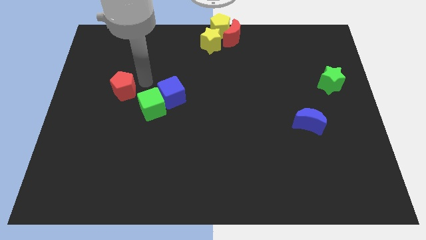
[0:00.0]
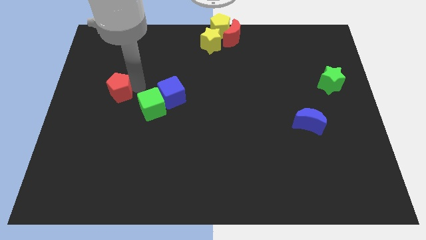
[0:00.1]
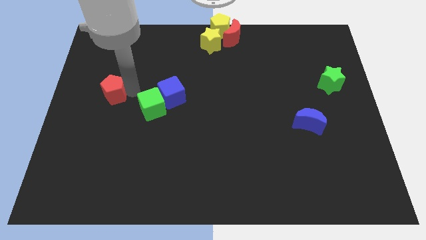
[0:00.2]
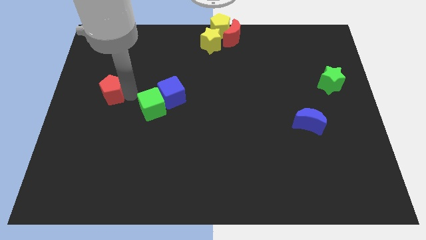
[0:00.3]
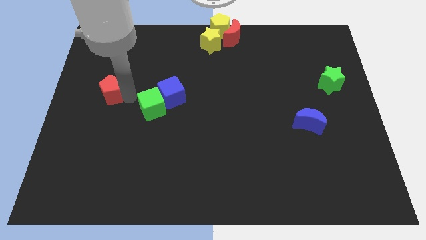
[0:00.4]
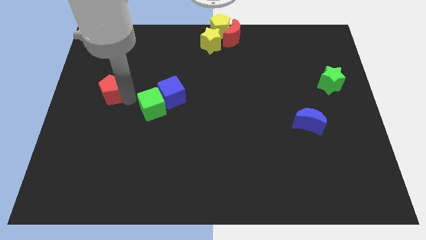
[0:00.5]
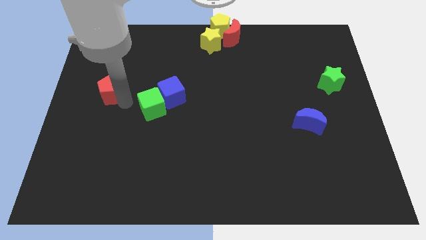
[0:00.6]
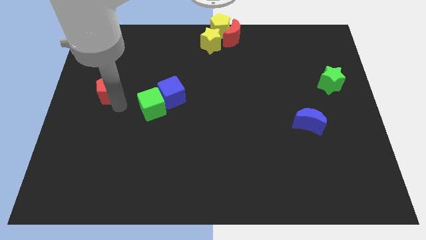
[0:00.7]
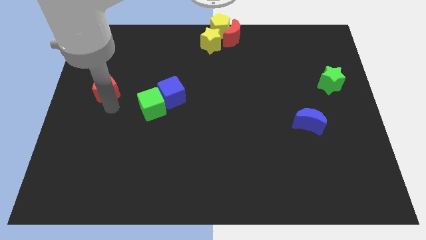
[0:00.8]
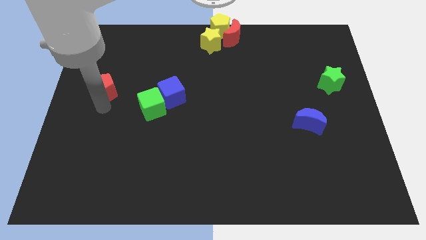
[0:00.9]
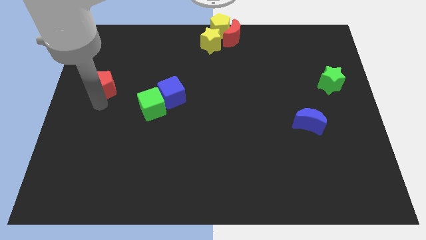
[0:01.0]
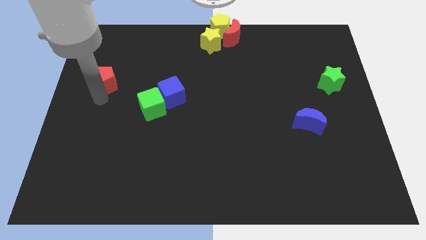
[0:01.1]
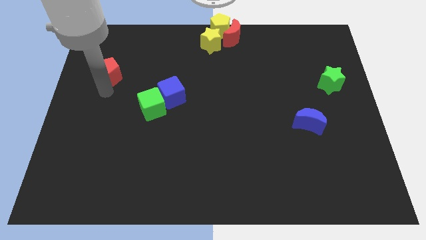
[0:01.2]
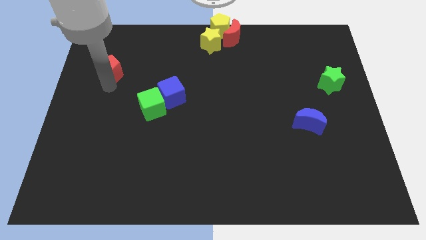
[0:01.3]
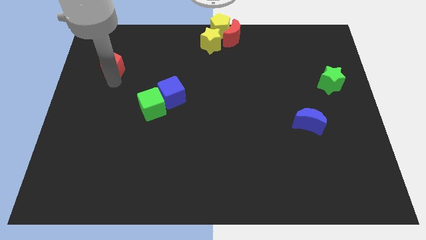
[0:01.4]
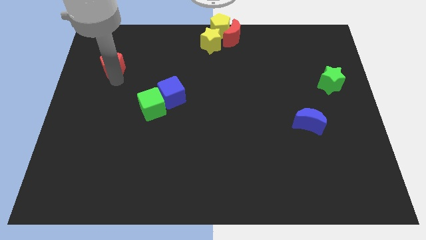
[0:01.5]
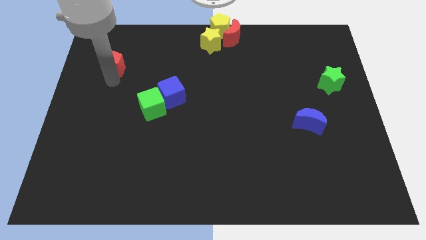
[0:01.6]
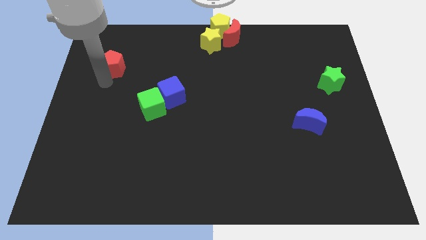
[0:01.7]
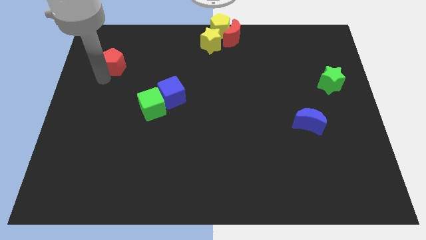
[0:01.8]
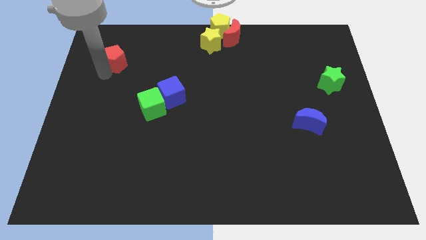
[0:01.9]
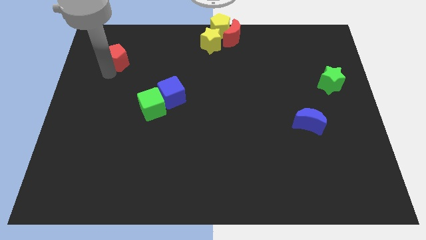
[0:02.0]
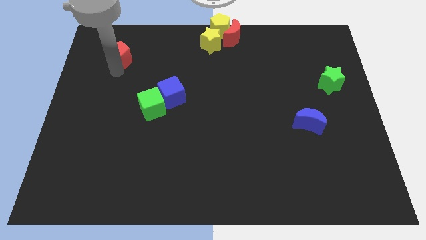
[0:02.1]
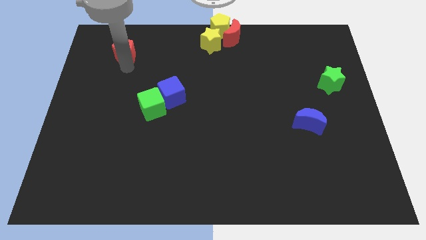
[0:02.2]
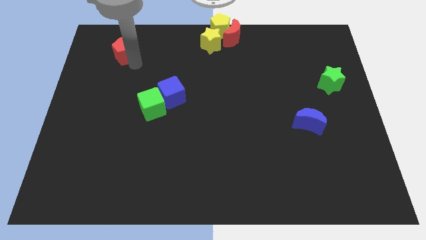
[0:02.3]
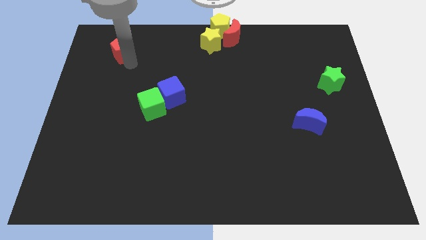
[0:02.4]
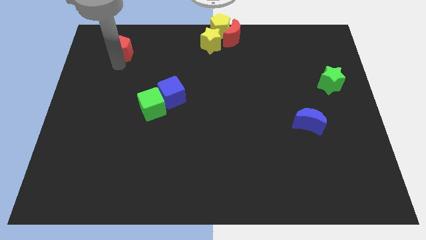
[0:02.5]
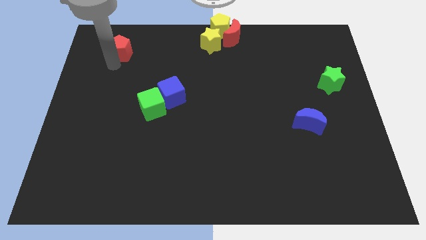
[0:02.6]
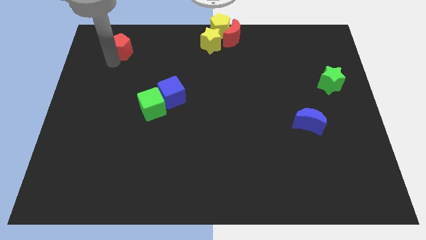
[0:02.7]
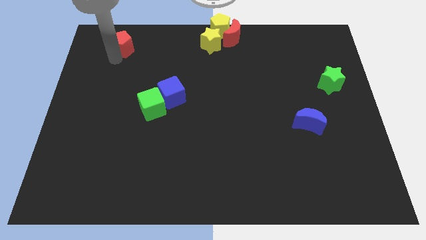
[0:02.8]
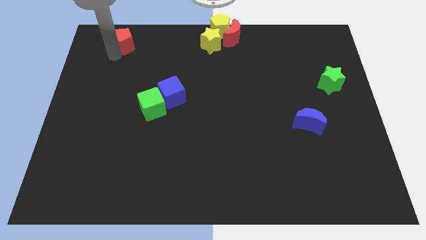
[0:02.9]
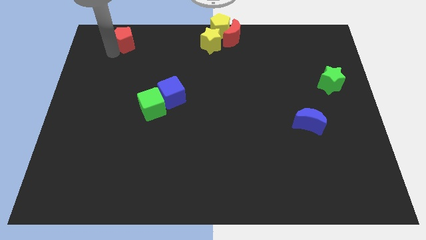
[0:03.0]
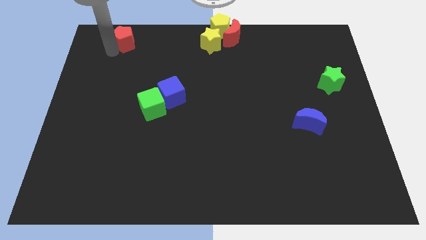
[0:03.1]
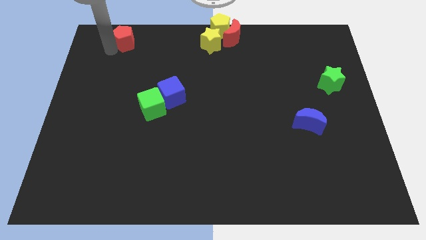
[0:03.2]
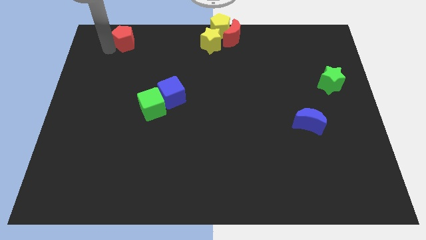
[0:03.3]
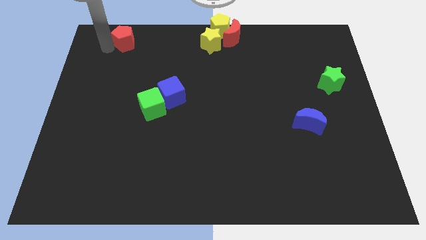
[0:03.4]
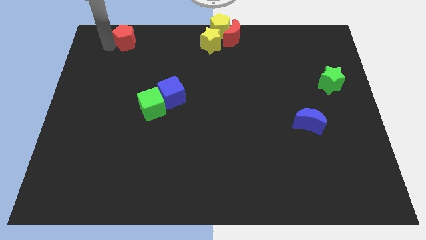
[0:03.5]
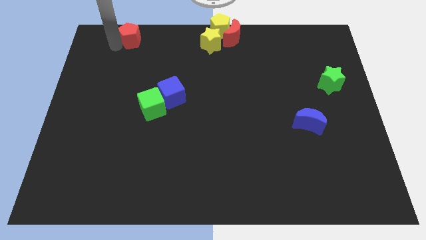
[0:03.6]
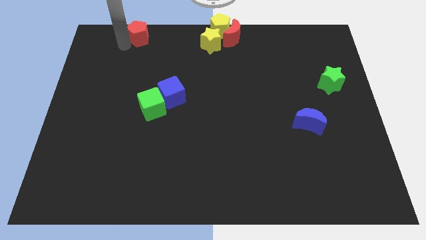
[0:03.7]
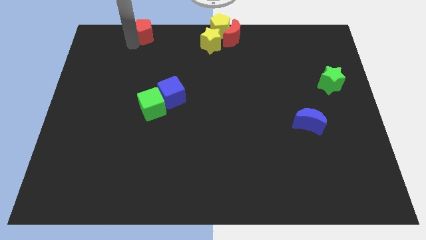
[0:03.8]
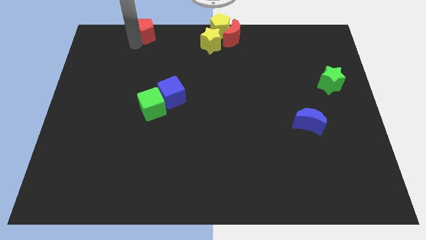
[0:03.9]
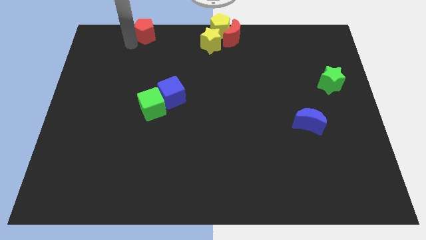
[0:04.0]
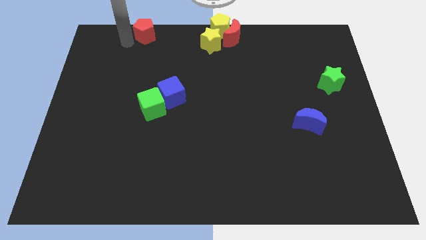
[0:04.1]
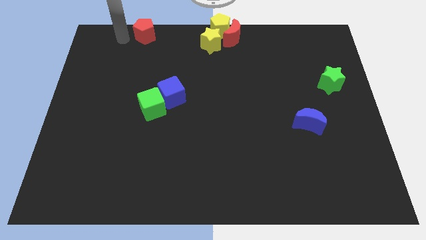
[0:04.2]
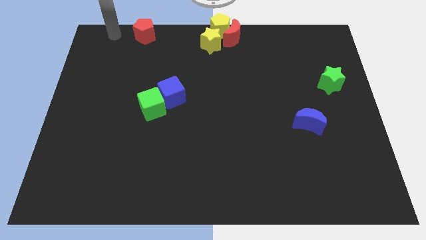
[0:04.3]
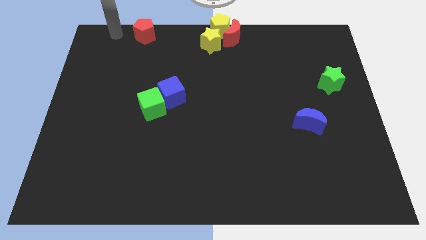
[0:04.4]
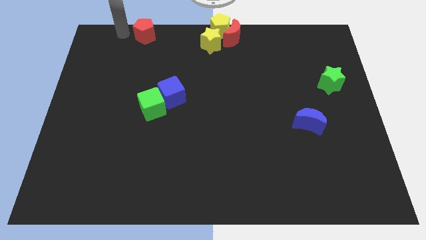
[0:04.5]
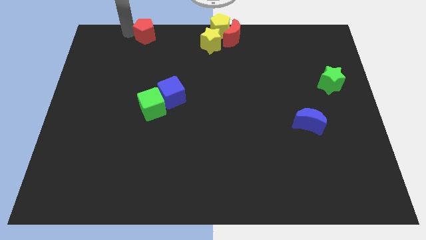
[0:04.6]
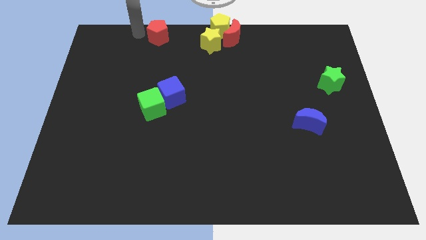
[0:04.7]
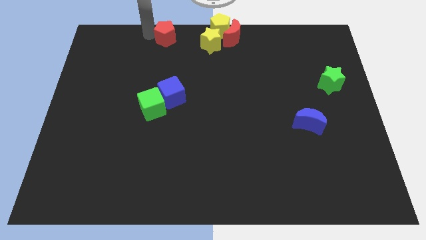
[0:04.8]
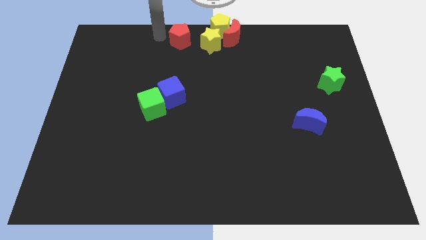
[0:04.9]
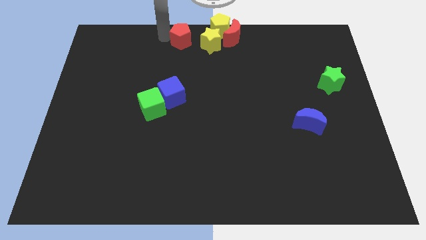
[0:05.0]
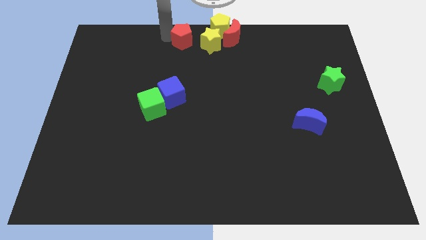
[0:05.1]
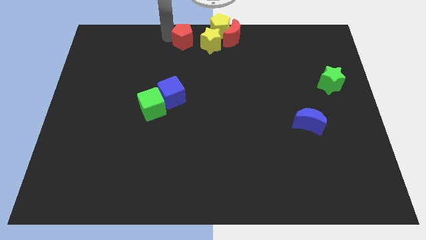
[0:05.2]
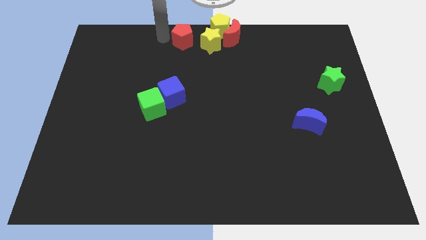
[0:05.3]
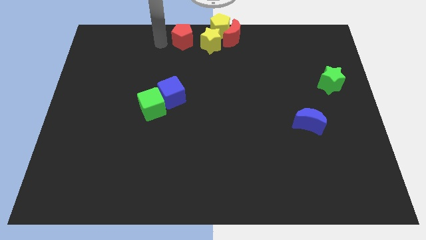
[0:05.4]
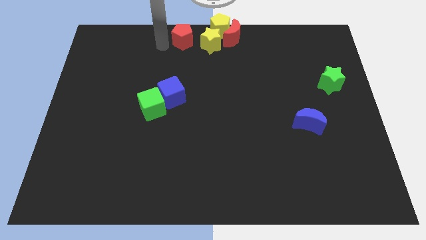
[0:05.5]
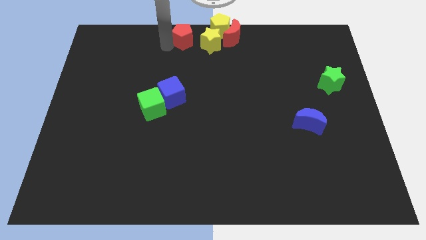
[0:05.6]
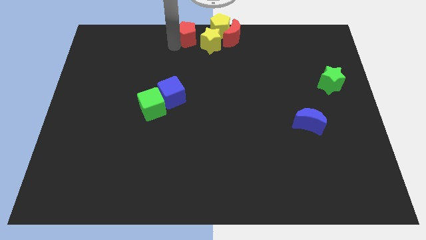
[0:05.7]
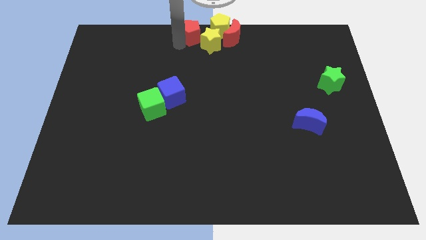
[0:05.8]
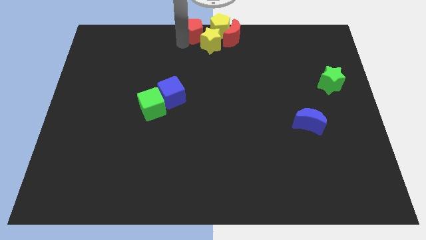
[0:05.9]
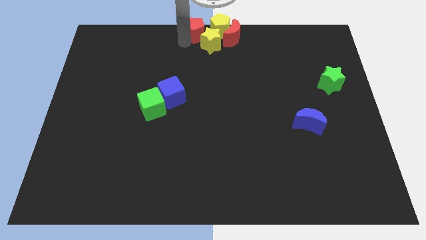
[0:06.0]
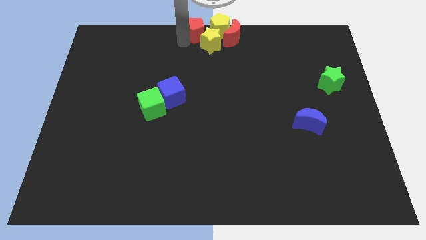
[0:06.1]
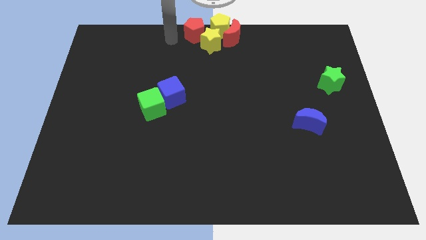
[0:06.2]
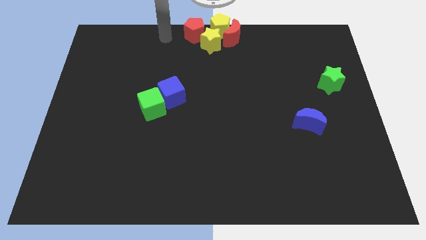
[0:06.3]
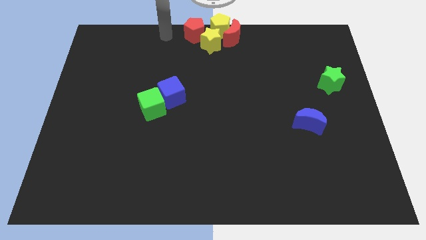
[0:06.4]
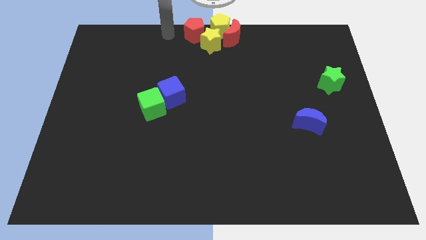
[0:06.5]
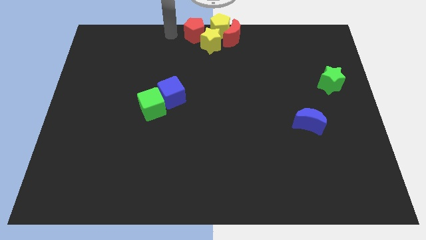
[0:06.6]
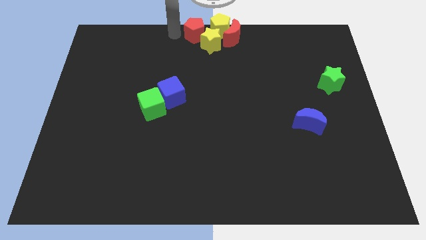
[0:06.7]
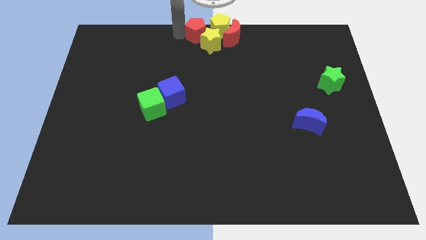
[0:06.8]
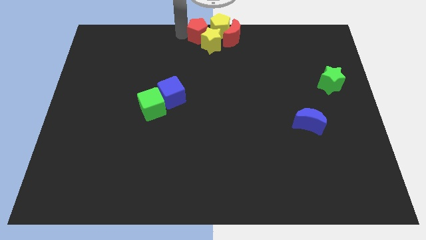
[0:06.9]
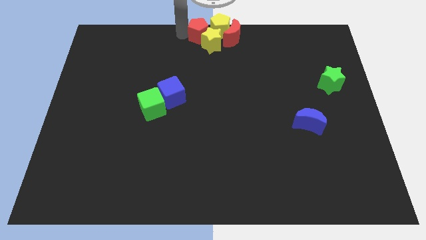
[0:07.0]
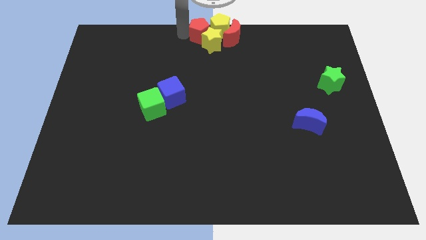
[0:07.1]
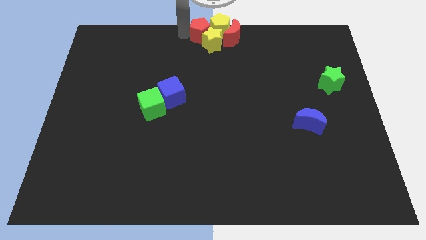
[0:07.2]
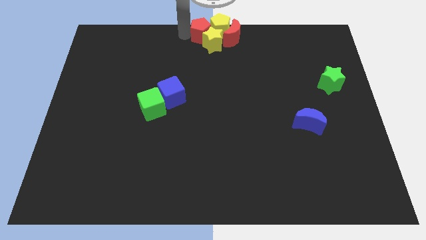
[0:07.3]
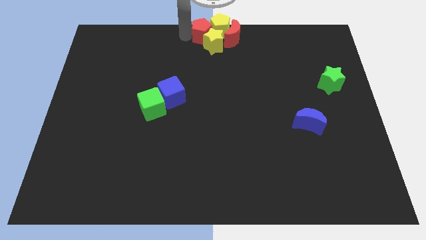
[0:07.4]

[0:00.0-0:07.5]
move the red pentagon to the left of the yellow pentagon

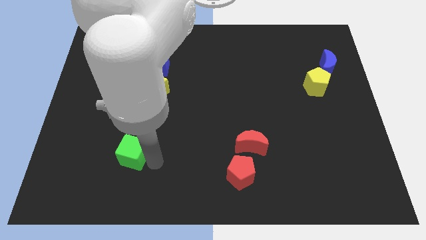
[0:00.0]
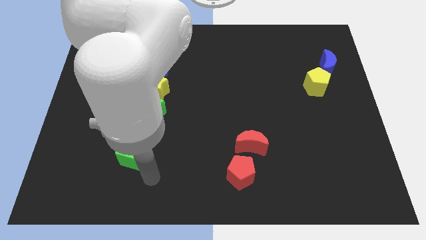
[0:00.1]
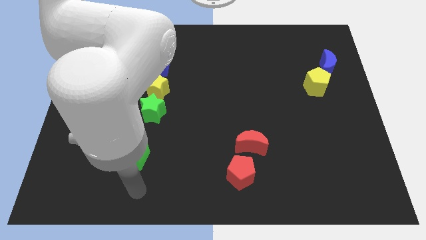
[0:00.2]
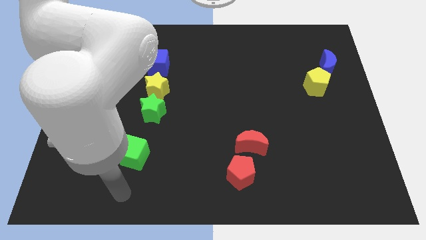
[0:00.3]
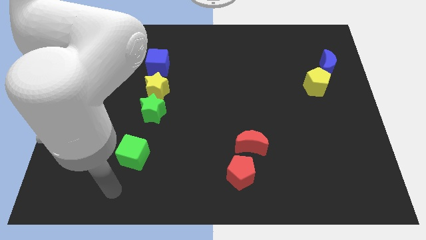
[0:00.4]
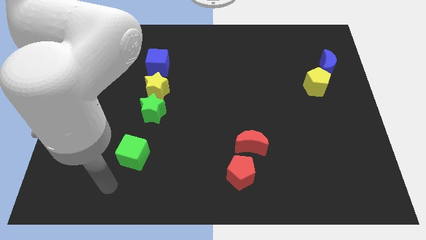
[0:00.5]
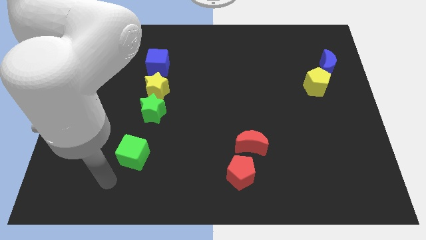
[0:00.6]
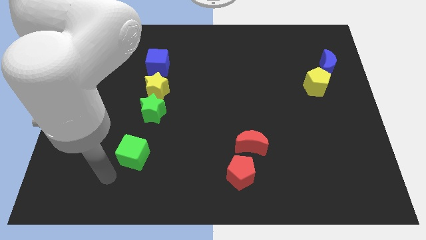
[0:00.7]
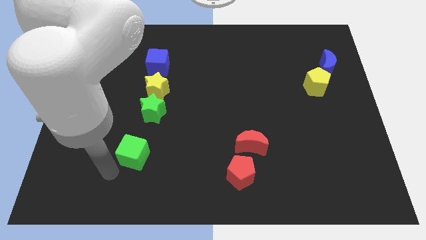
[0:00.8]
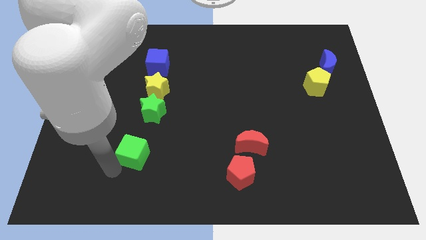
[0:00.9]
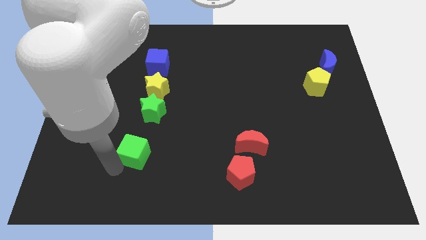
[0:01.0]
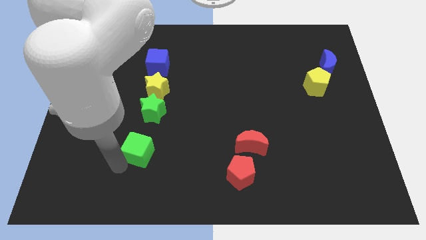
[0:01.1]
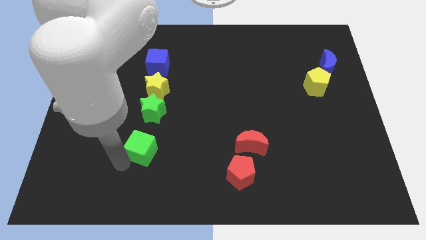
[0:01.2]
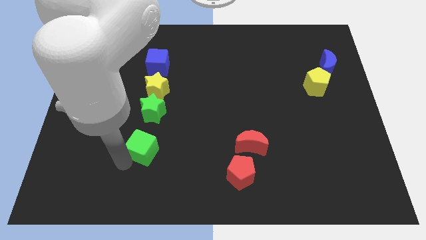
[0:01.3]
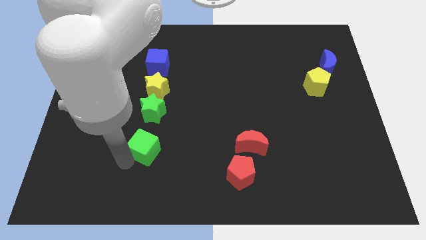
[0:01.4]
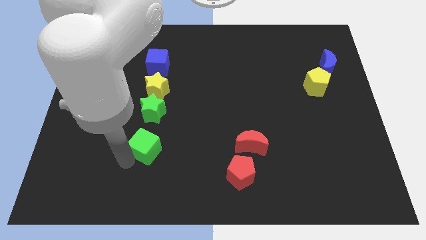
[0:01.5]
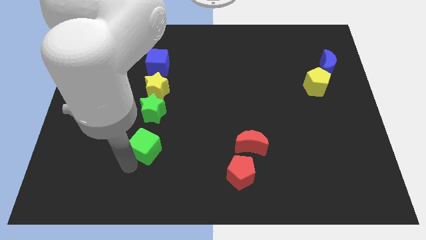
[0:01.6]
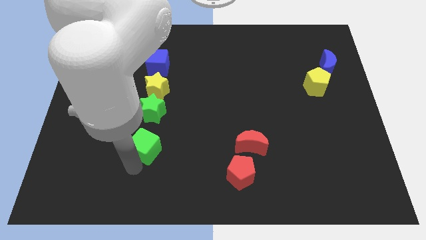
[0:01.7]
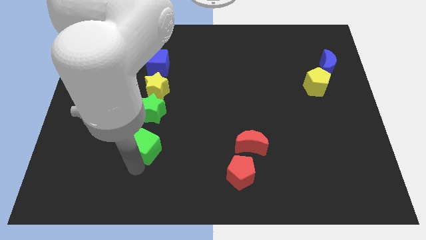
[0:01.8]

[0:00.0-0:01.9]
place the green cube vertically below to the green star
